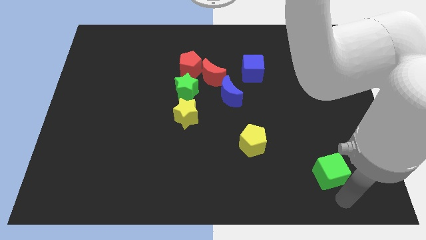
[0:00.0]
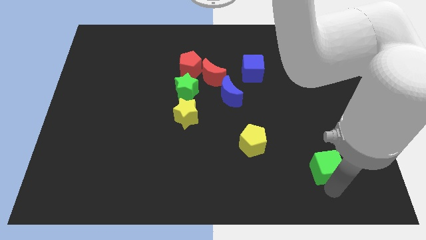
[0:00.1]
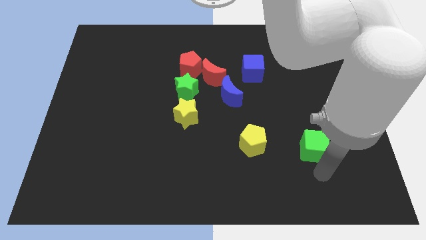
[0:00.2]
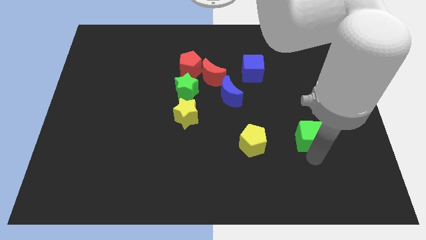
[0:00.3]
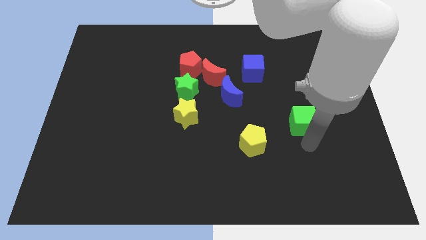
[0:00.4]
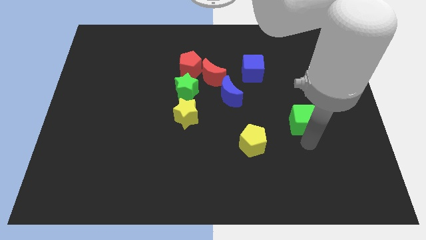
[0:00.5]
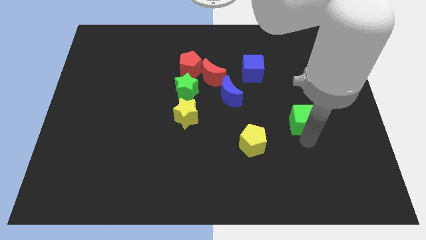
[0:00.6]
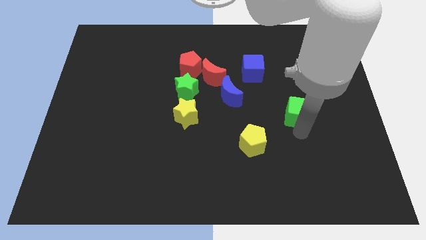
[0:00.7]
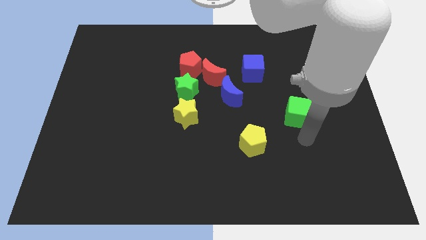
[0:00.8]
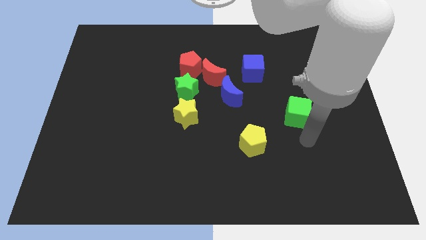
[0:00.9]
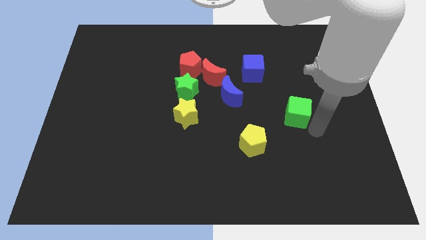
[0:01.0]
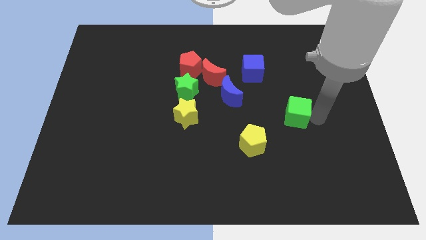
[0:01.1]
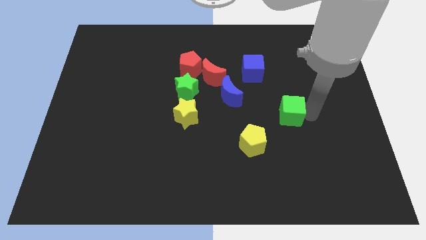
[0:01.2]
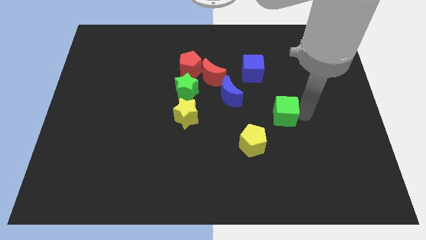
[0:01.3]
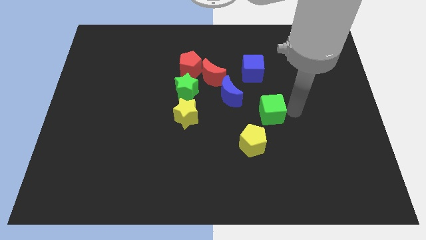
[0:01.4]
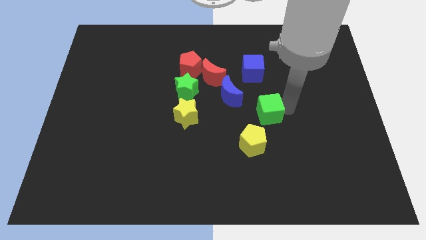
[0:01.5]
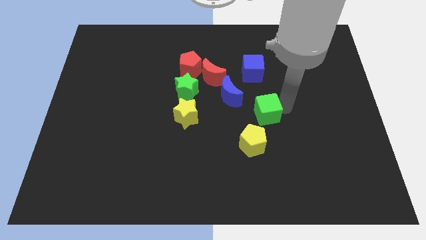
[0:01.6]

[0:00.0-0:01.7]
move the green cube towards the blue cube

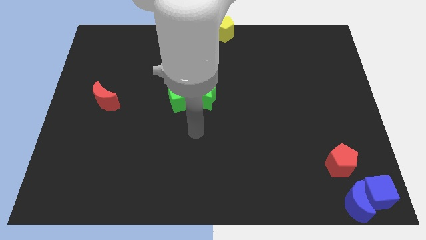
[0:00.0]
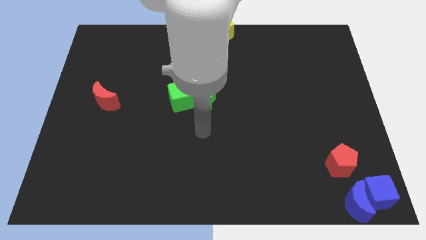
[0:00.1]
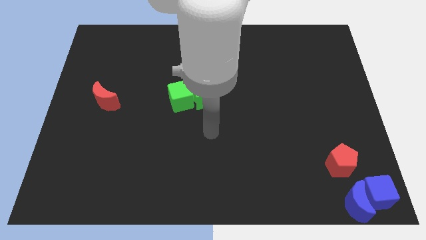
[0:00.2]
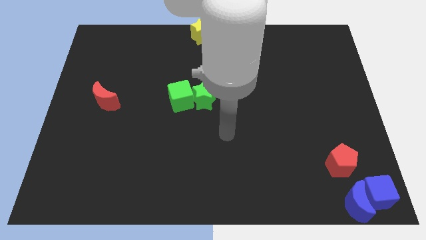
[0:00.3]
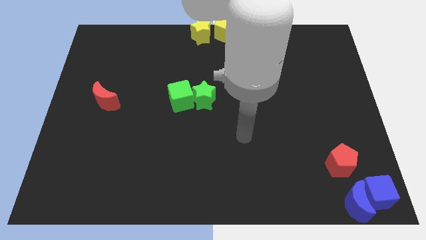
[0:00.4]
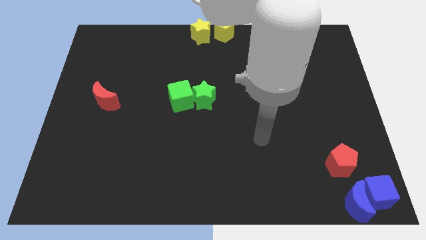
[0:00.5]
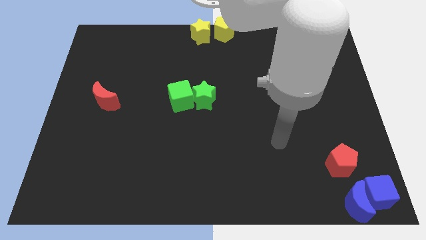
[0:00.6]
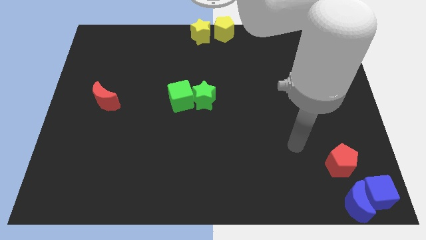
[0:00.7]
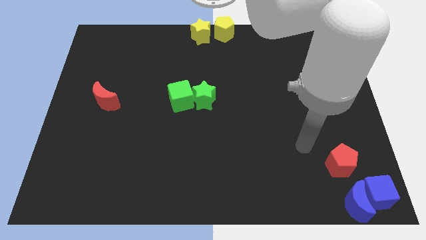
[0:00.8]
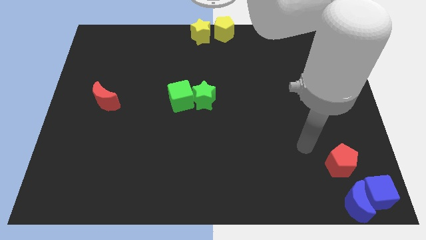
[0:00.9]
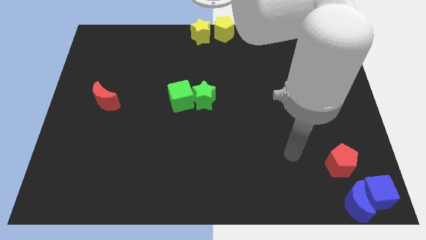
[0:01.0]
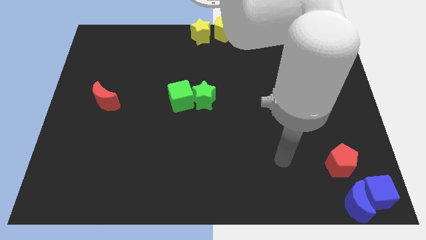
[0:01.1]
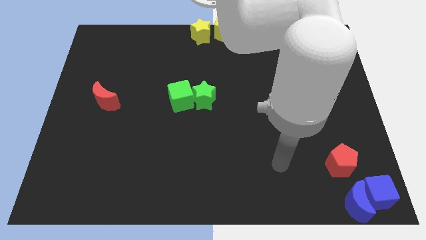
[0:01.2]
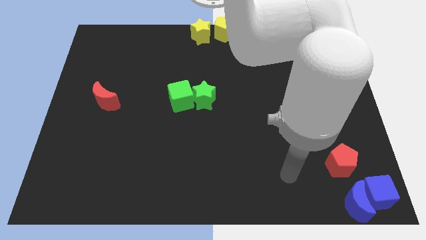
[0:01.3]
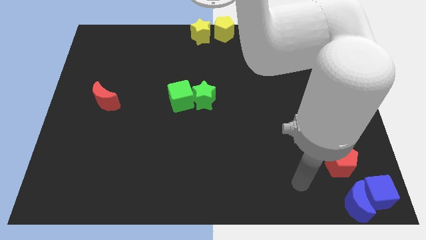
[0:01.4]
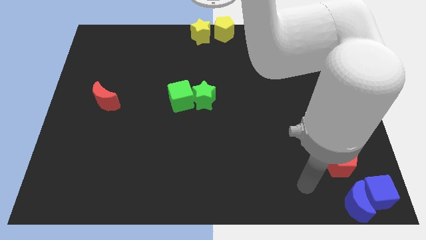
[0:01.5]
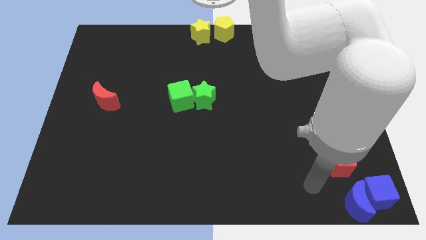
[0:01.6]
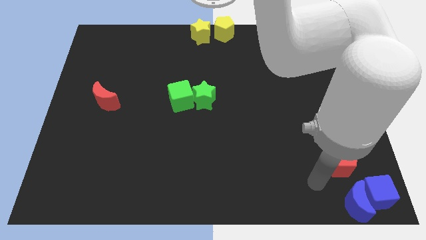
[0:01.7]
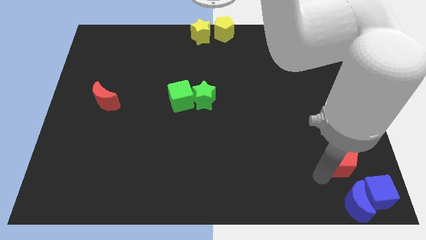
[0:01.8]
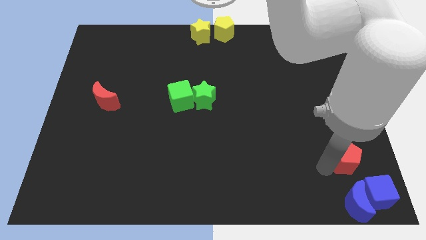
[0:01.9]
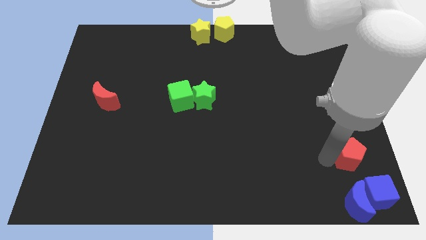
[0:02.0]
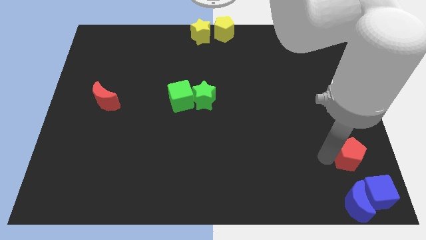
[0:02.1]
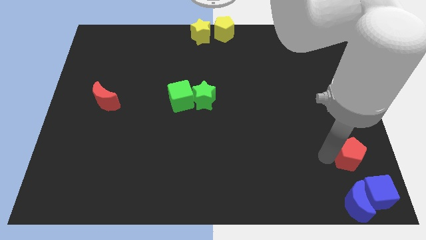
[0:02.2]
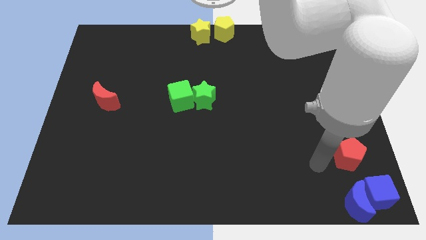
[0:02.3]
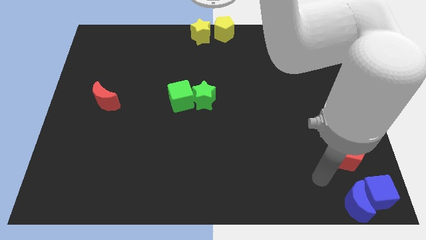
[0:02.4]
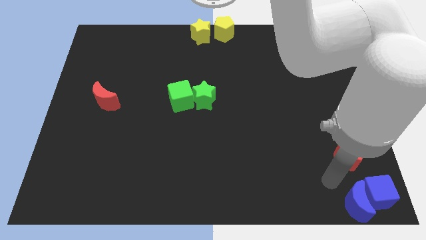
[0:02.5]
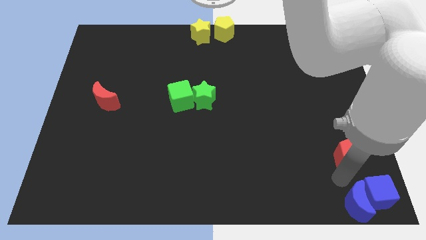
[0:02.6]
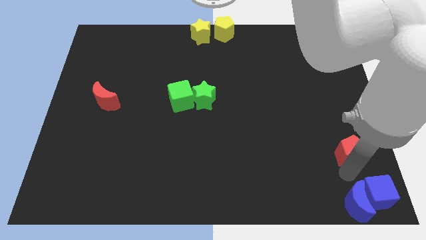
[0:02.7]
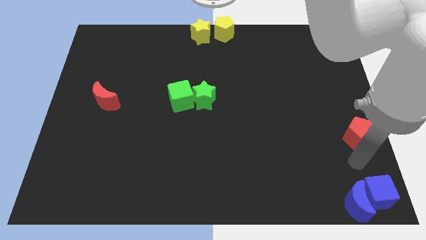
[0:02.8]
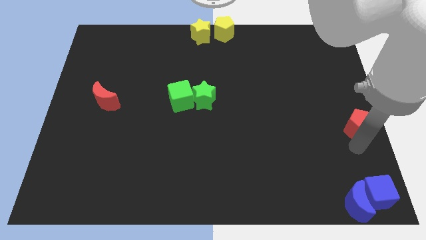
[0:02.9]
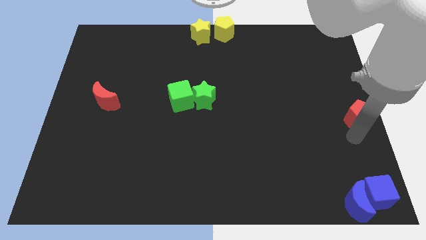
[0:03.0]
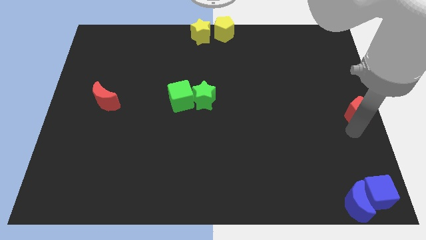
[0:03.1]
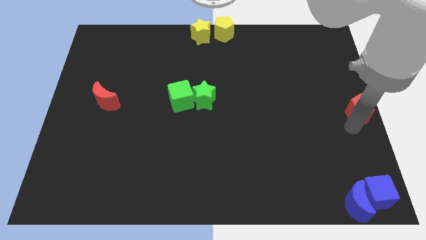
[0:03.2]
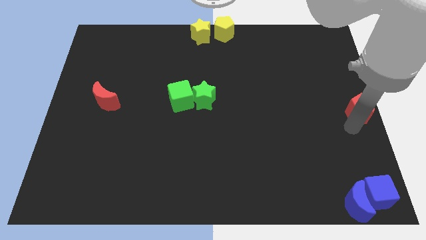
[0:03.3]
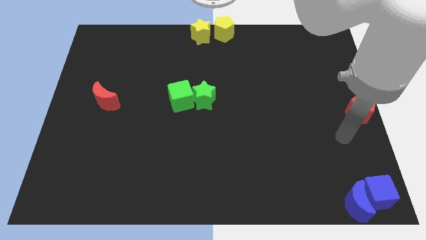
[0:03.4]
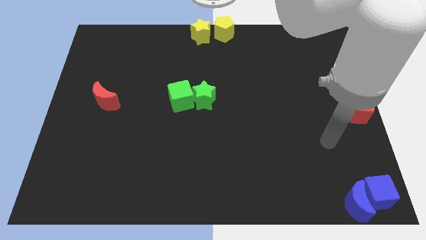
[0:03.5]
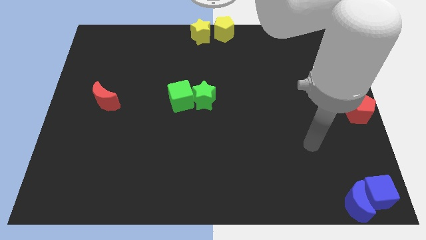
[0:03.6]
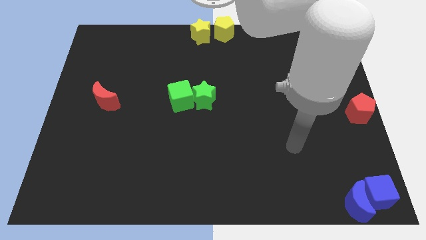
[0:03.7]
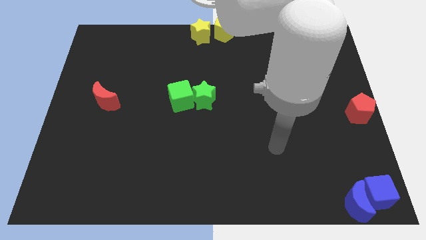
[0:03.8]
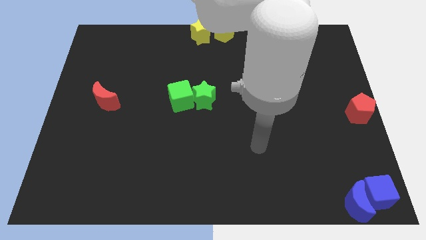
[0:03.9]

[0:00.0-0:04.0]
push the red pentagon at the top of blue blocks

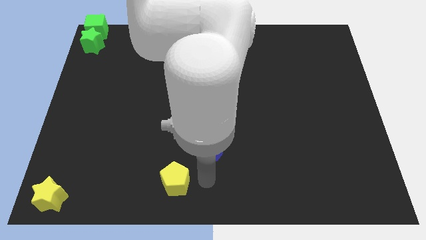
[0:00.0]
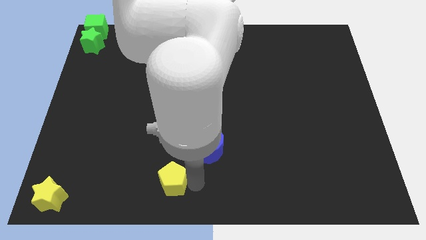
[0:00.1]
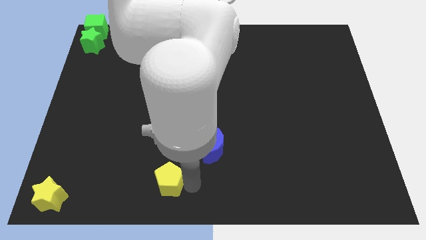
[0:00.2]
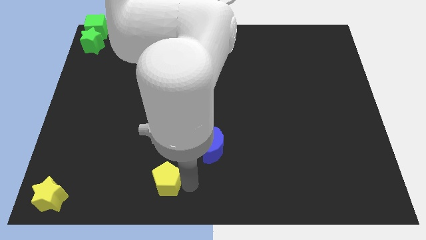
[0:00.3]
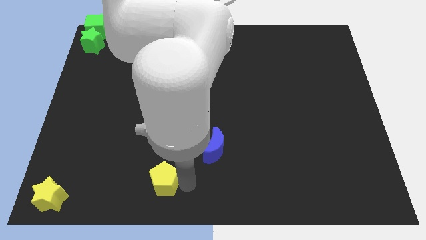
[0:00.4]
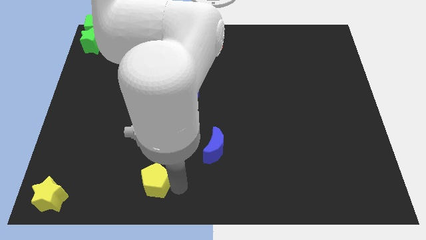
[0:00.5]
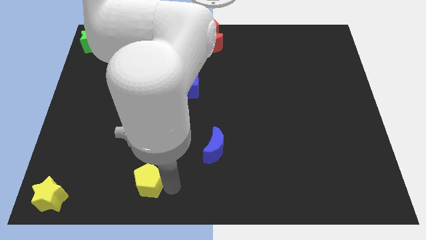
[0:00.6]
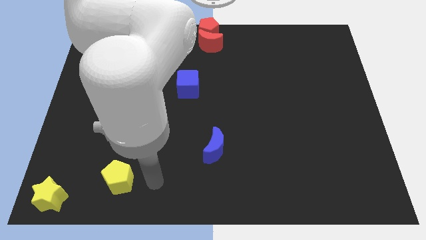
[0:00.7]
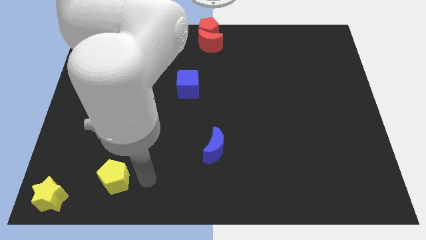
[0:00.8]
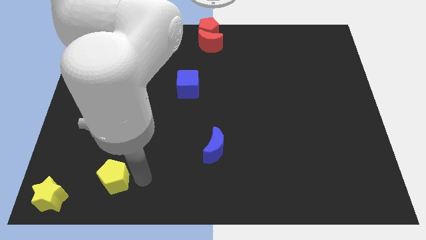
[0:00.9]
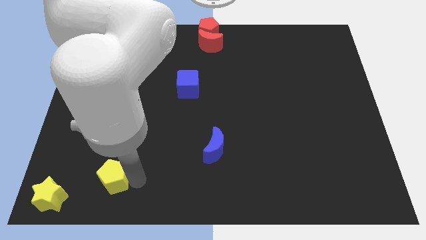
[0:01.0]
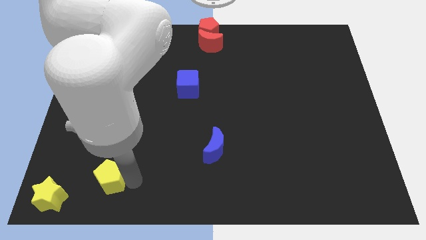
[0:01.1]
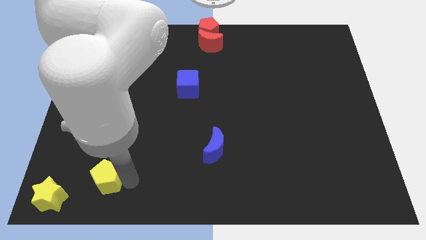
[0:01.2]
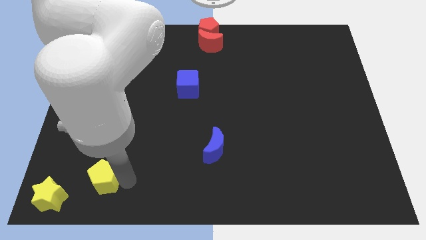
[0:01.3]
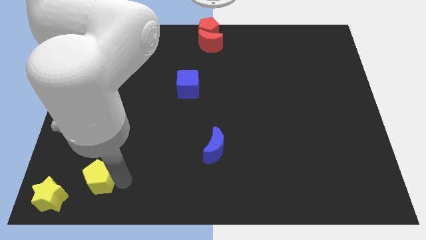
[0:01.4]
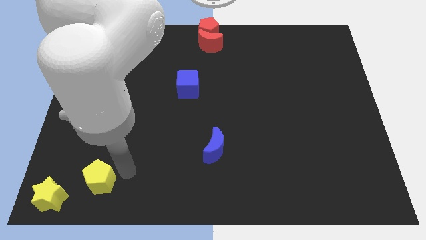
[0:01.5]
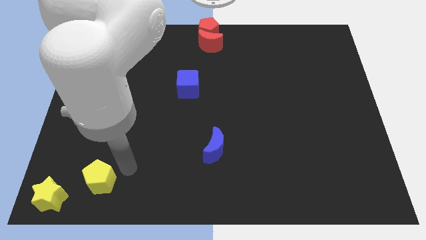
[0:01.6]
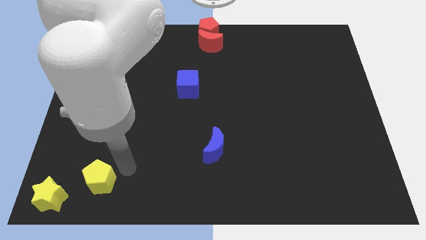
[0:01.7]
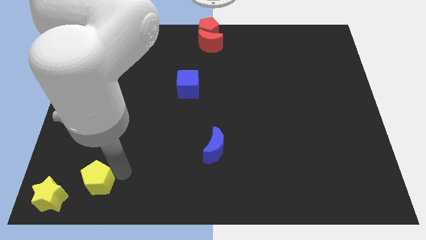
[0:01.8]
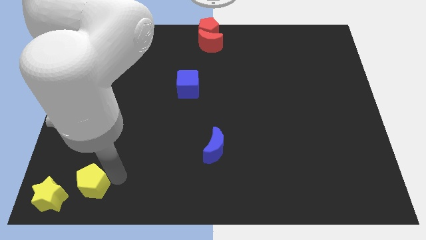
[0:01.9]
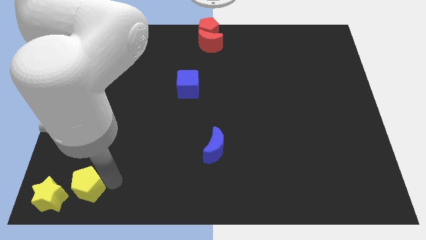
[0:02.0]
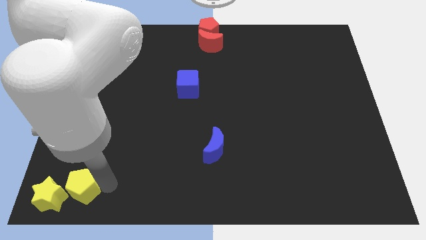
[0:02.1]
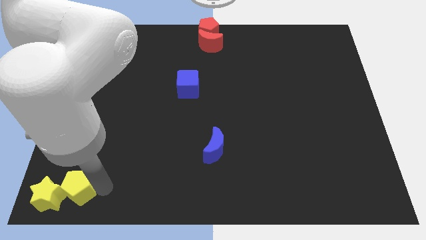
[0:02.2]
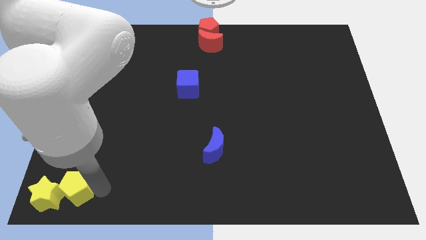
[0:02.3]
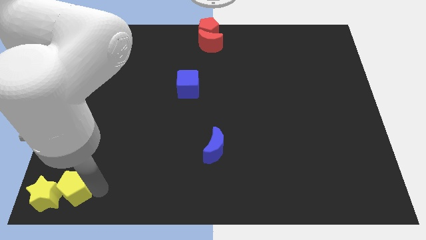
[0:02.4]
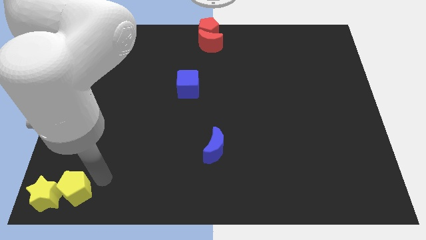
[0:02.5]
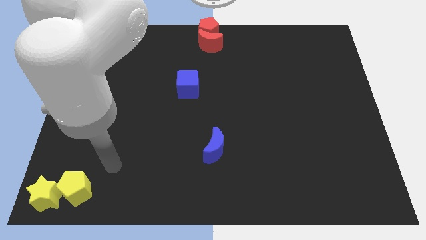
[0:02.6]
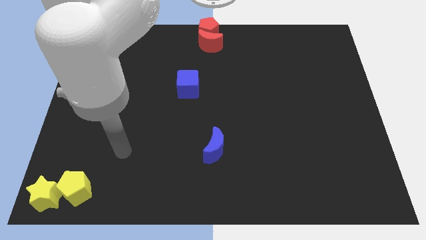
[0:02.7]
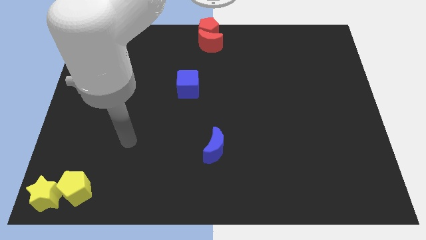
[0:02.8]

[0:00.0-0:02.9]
move the yellow pentagon into the yellow star

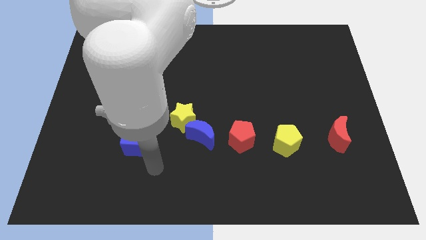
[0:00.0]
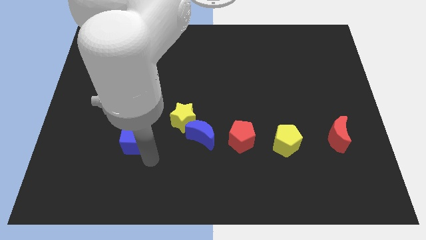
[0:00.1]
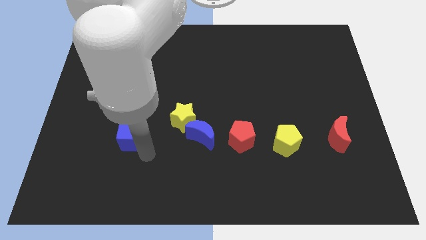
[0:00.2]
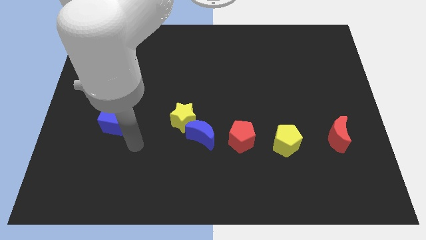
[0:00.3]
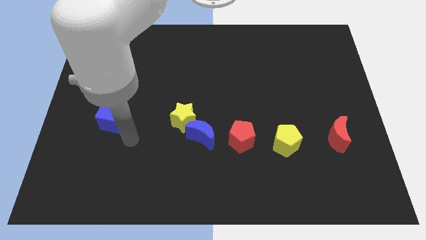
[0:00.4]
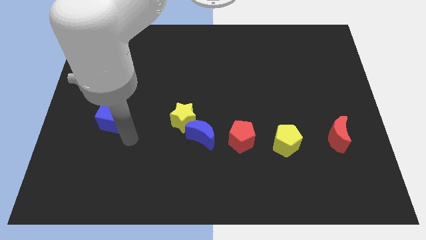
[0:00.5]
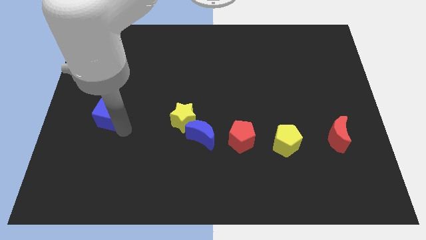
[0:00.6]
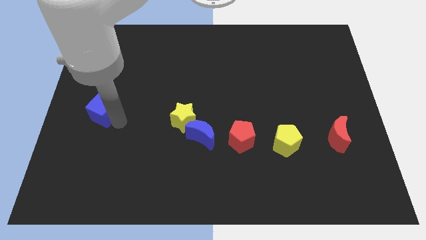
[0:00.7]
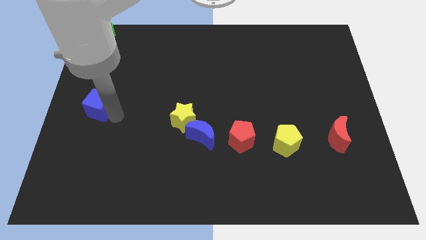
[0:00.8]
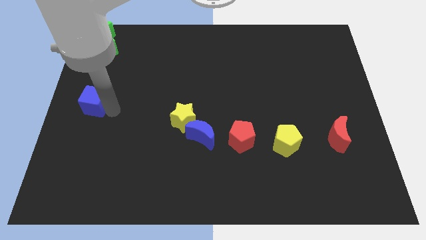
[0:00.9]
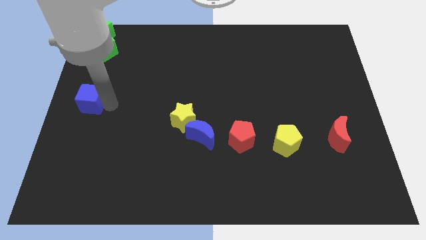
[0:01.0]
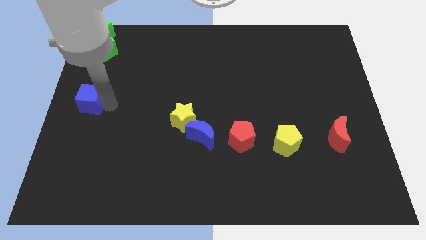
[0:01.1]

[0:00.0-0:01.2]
move blue cube slightly upwards
